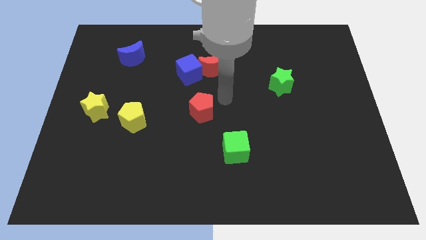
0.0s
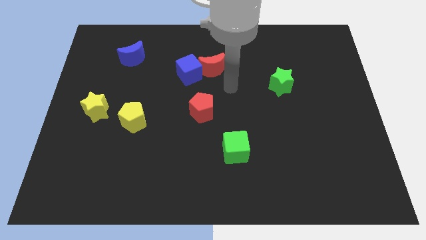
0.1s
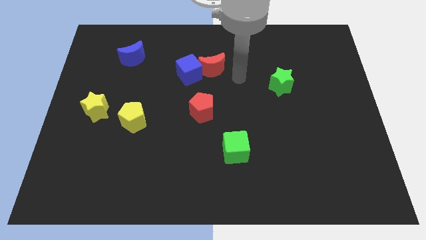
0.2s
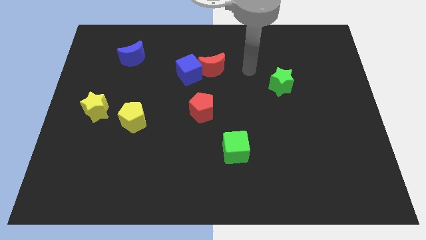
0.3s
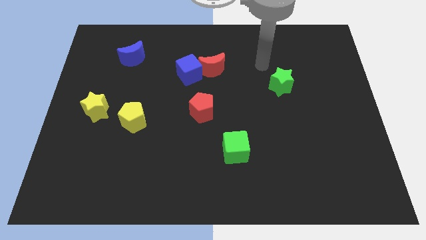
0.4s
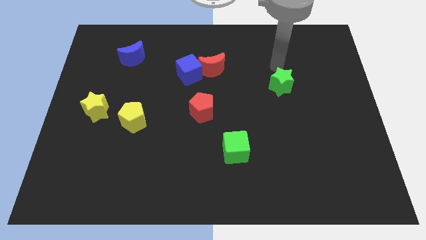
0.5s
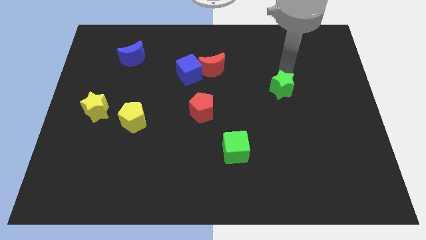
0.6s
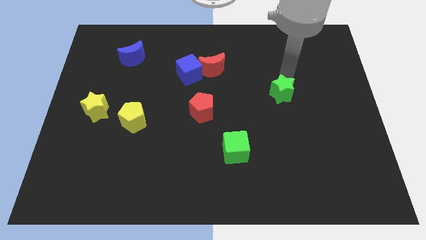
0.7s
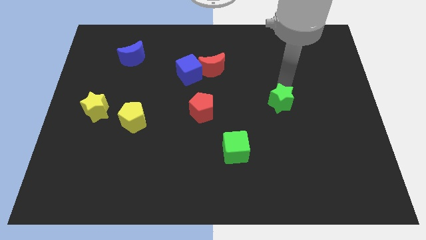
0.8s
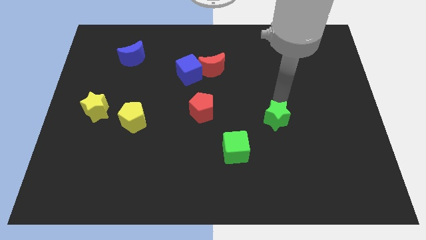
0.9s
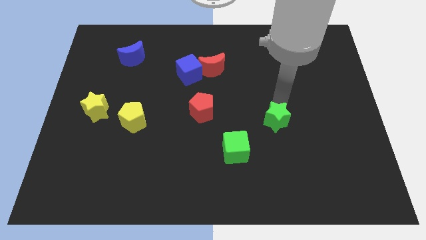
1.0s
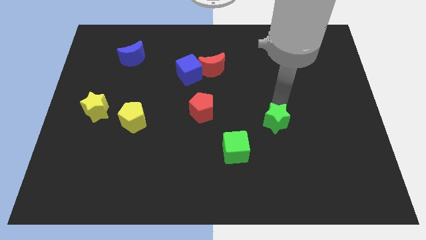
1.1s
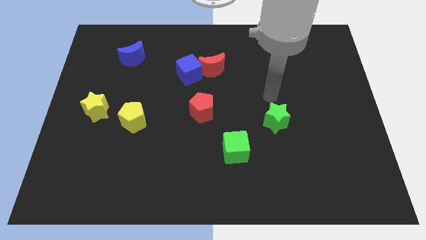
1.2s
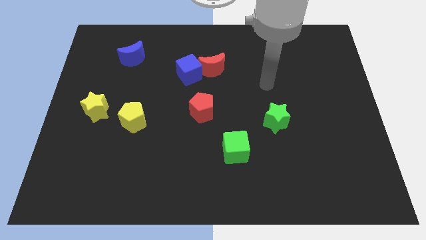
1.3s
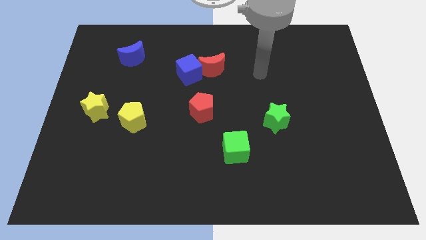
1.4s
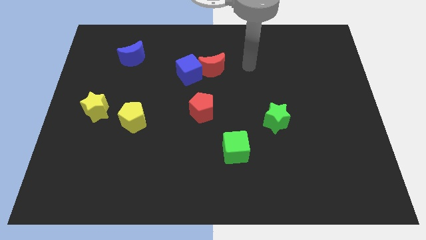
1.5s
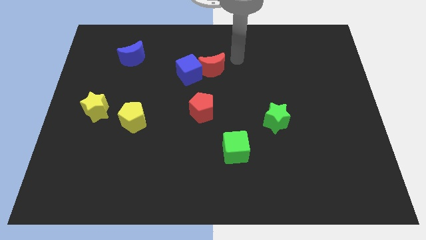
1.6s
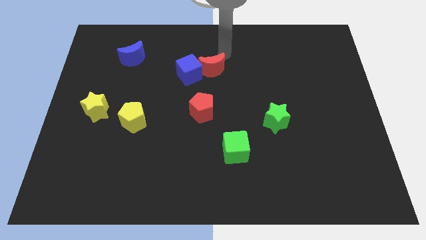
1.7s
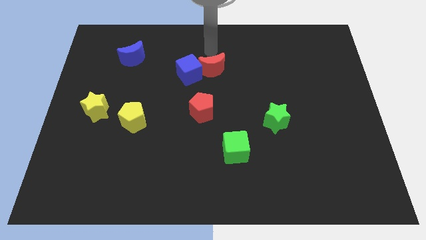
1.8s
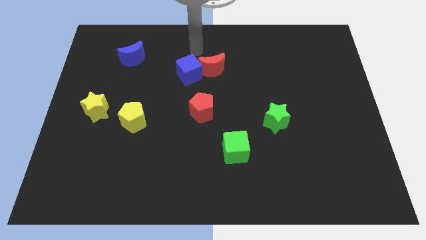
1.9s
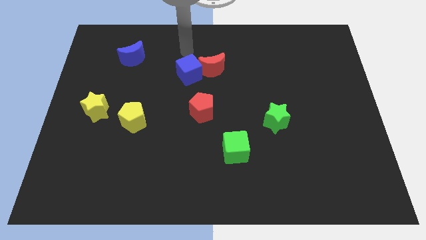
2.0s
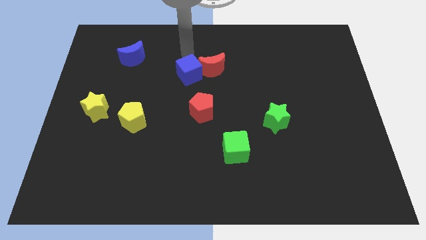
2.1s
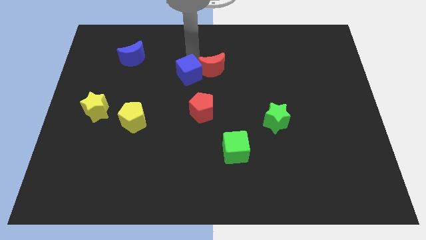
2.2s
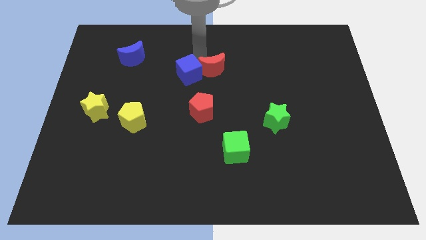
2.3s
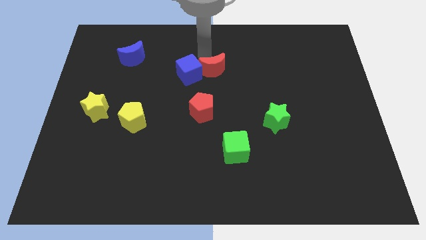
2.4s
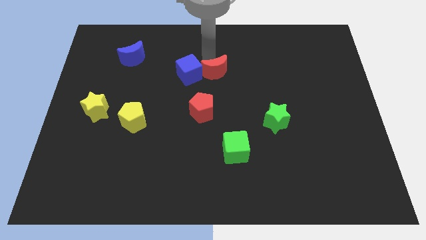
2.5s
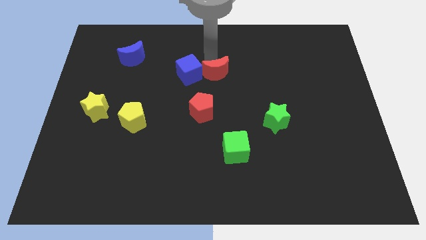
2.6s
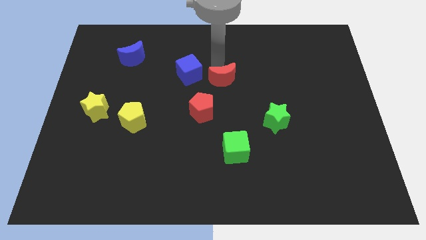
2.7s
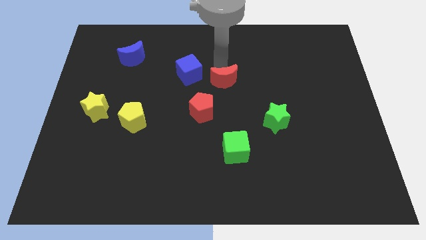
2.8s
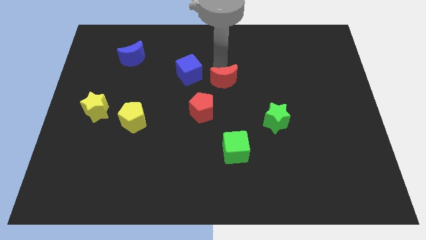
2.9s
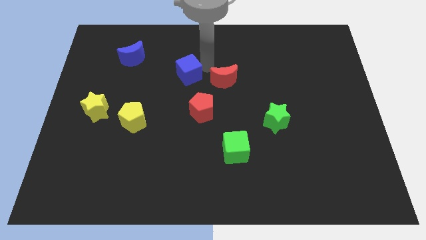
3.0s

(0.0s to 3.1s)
place the green star and red moon towards green cube at the center

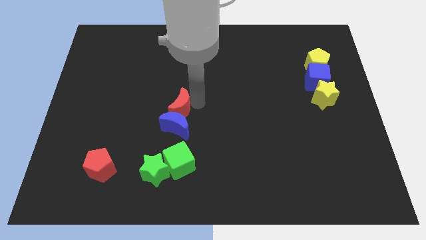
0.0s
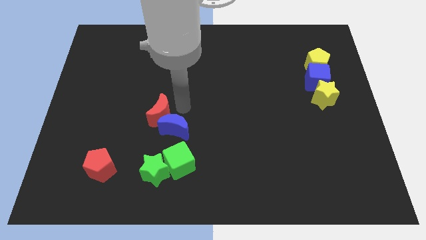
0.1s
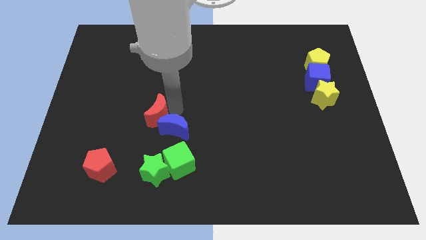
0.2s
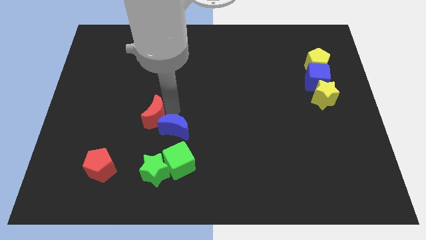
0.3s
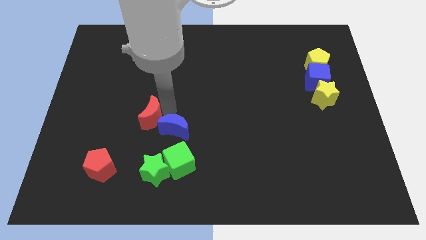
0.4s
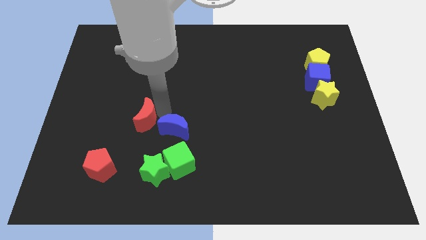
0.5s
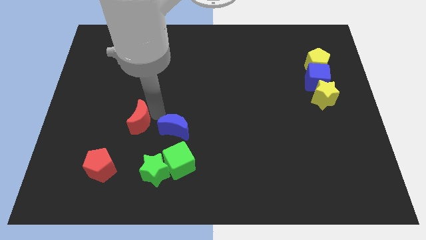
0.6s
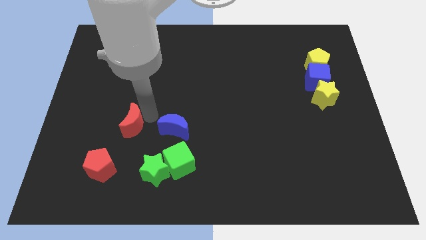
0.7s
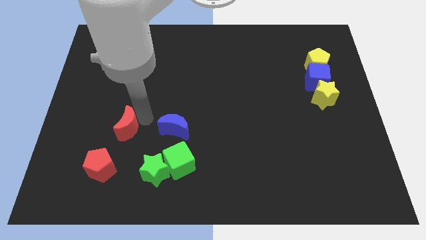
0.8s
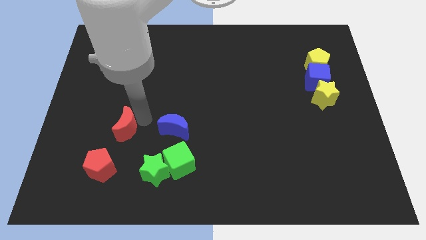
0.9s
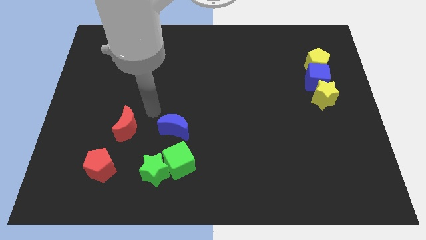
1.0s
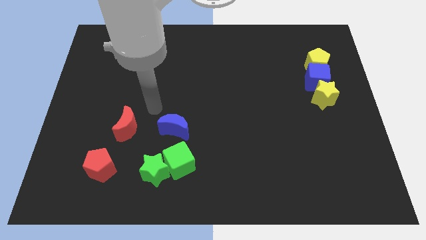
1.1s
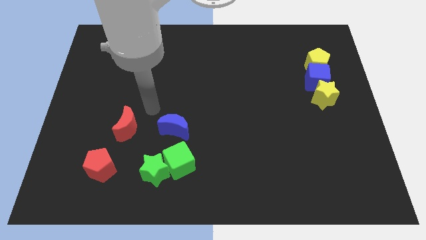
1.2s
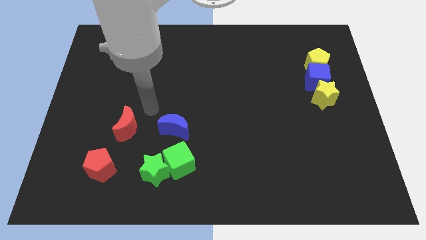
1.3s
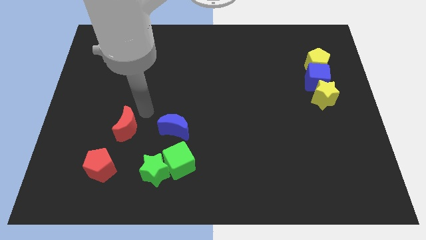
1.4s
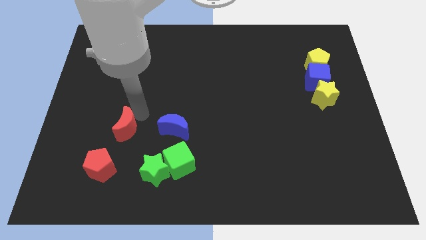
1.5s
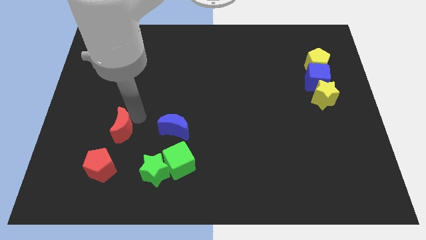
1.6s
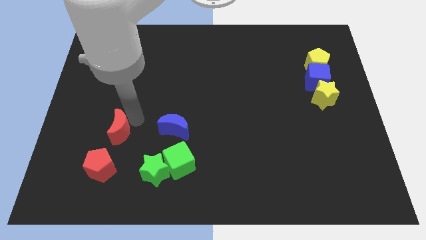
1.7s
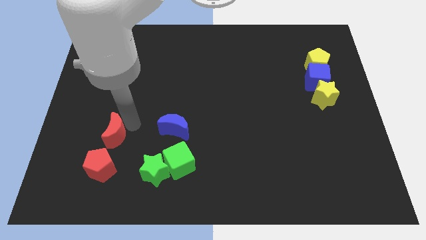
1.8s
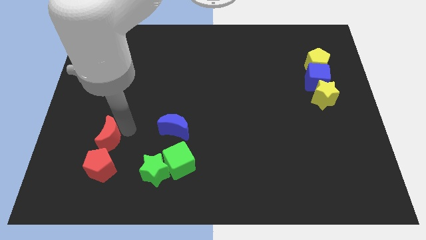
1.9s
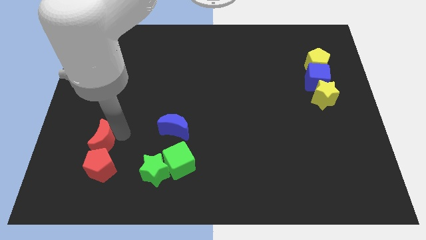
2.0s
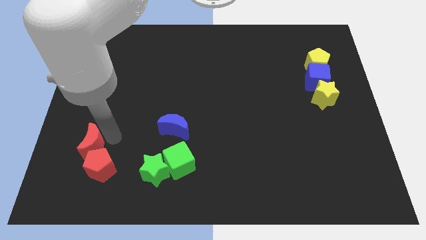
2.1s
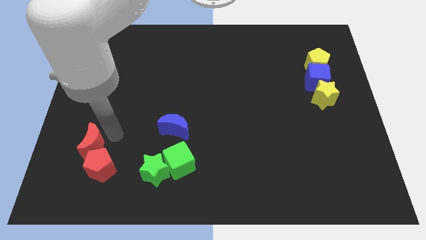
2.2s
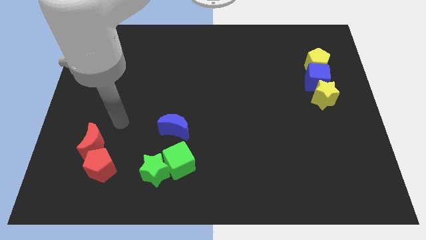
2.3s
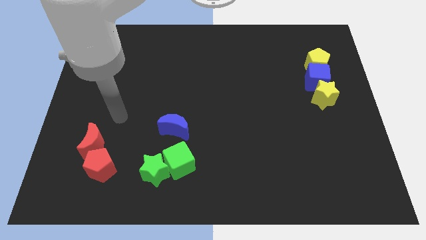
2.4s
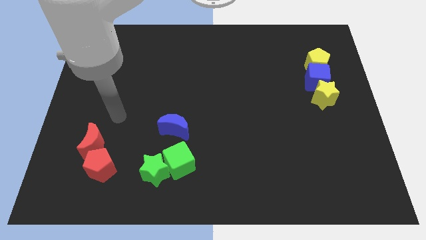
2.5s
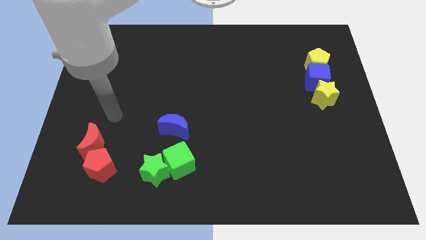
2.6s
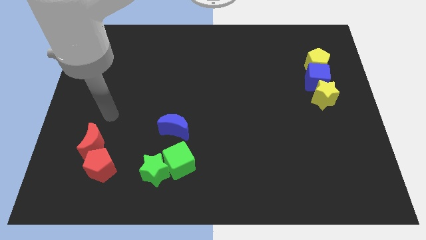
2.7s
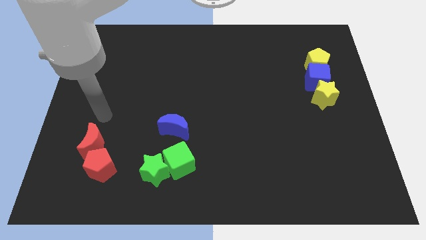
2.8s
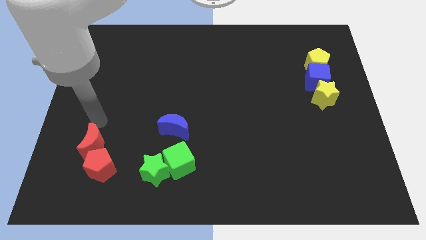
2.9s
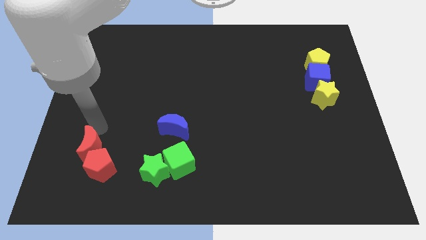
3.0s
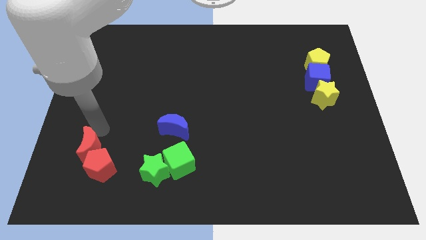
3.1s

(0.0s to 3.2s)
separate the red moon and blue moon

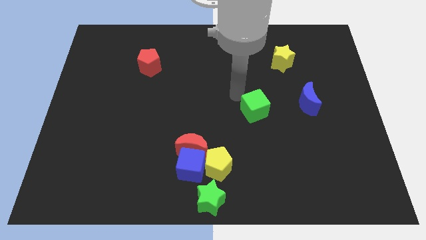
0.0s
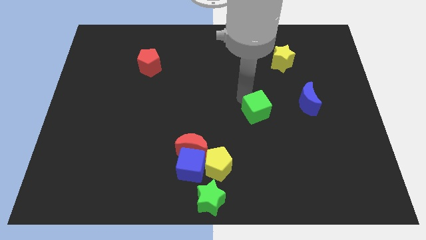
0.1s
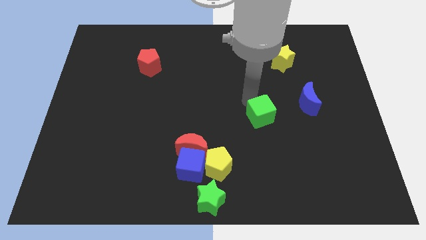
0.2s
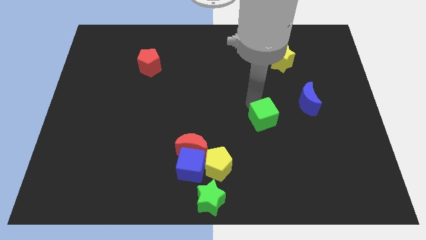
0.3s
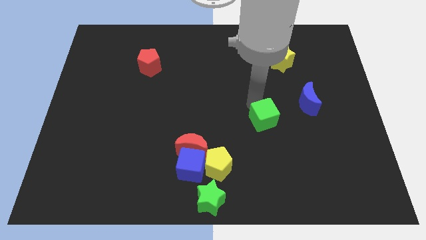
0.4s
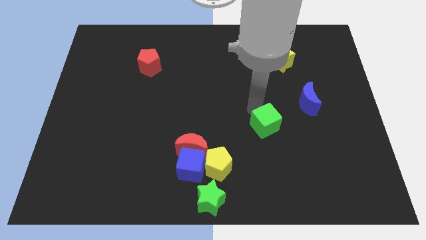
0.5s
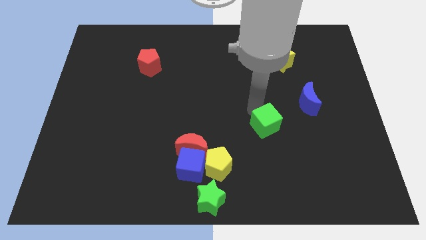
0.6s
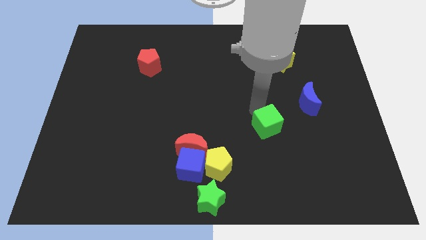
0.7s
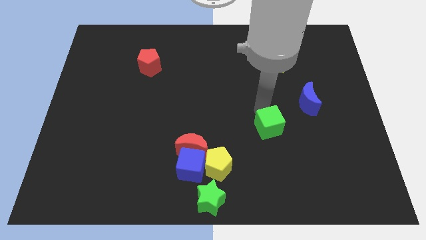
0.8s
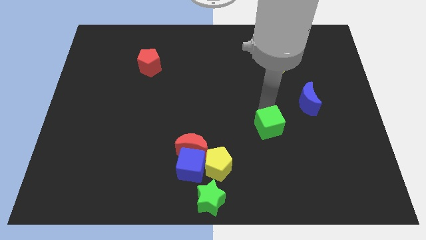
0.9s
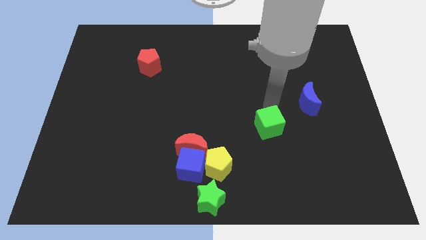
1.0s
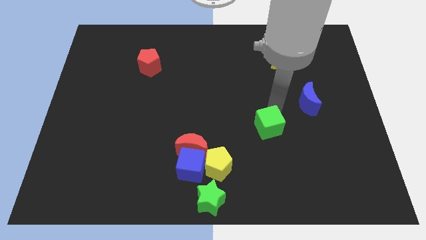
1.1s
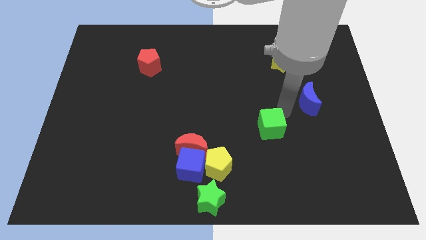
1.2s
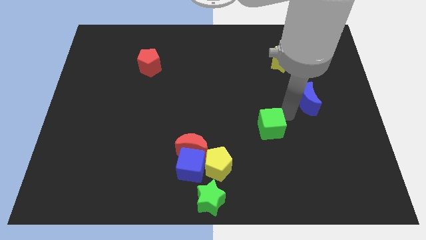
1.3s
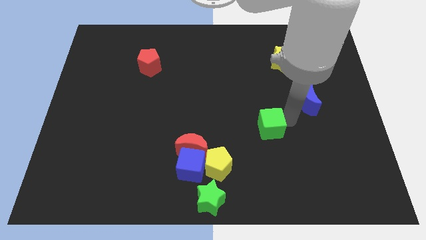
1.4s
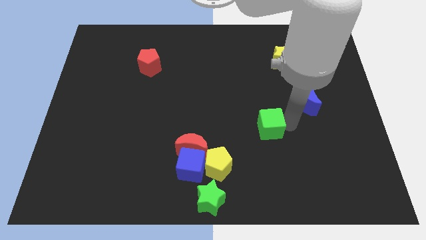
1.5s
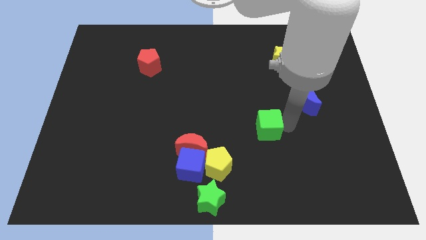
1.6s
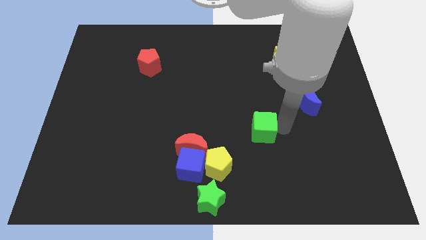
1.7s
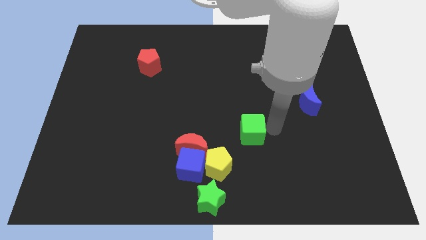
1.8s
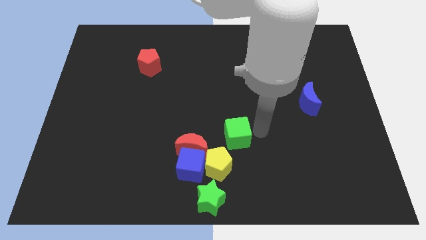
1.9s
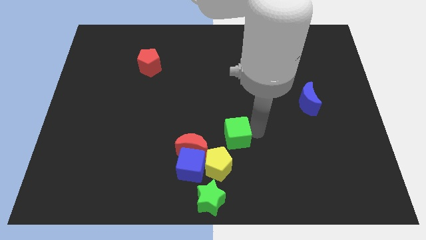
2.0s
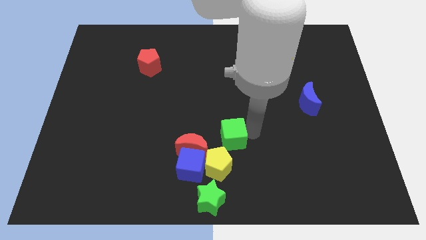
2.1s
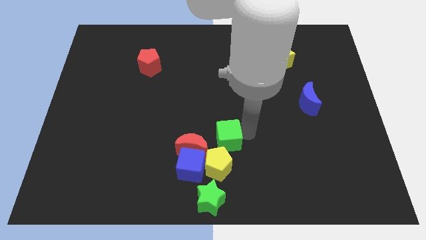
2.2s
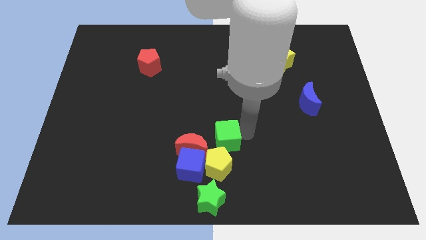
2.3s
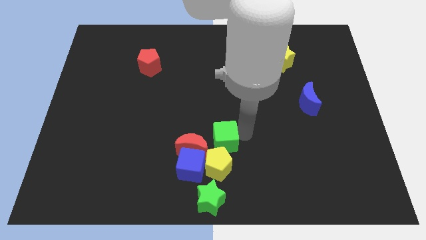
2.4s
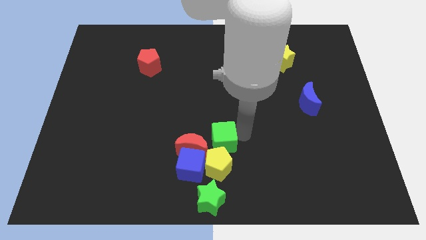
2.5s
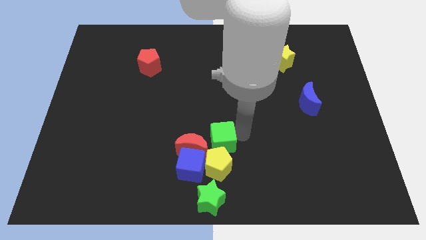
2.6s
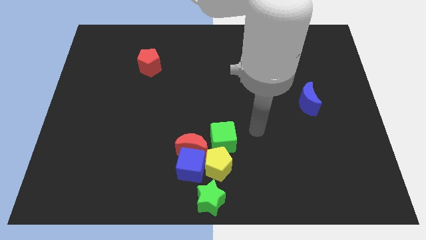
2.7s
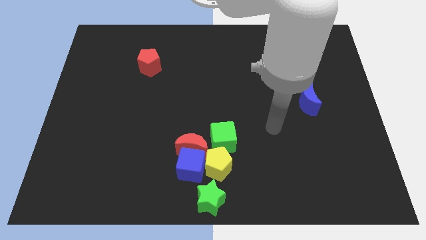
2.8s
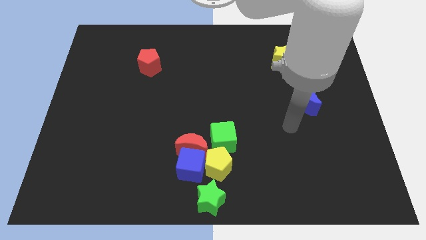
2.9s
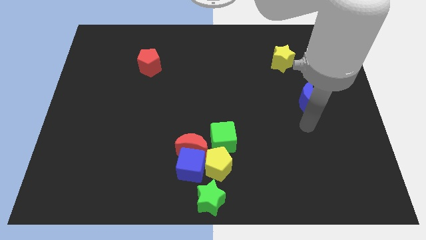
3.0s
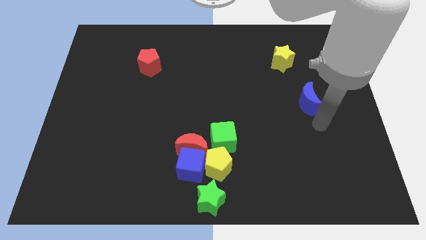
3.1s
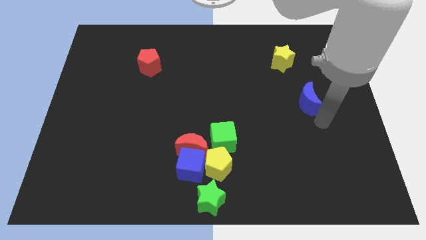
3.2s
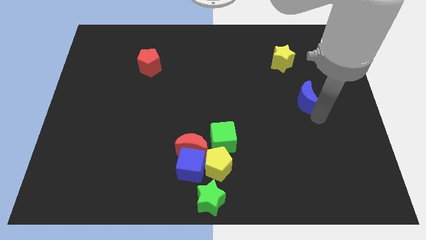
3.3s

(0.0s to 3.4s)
move the green cube above the yellow pentagon
